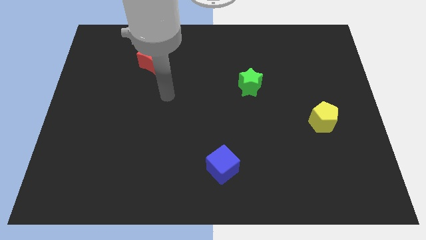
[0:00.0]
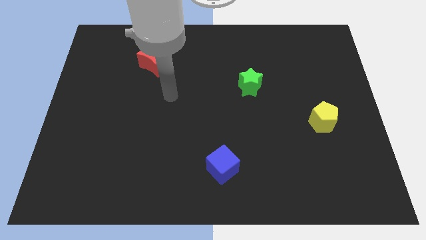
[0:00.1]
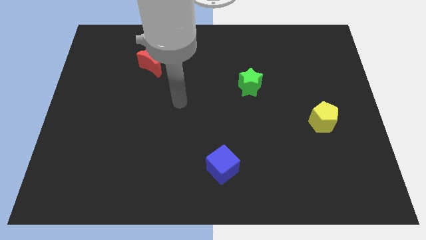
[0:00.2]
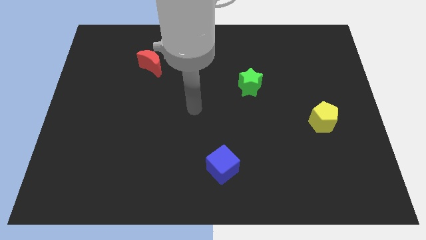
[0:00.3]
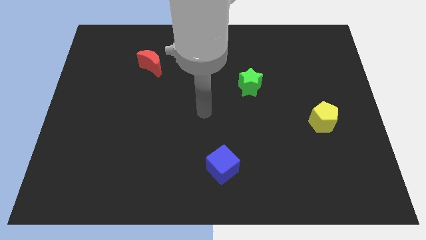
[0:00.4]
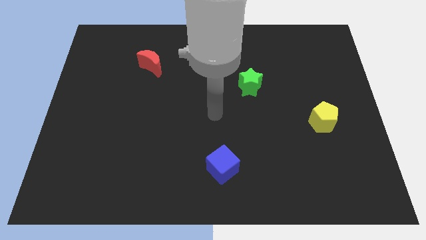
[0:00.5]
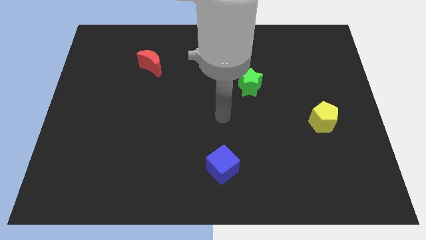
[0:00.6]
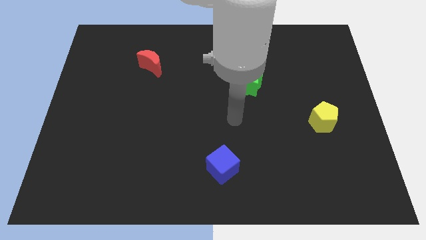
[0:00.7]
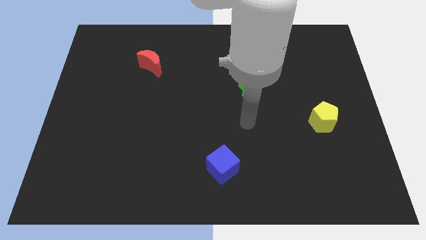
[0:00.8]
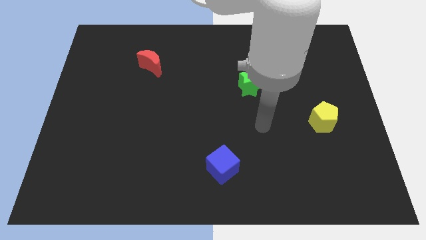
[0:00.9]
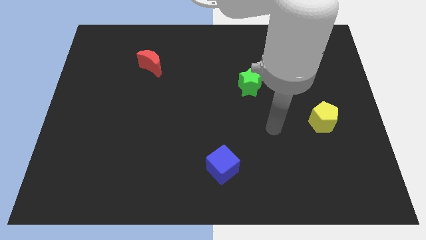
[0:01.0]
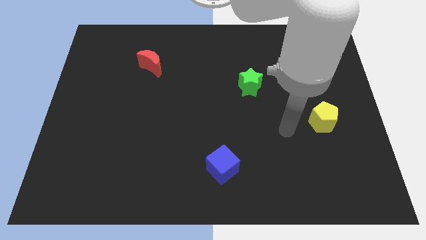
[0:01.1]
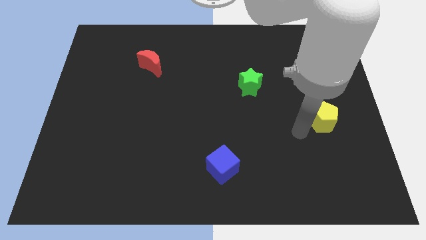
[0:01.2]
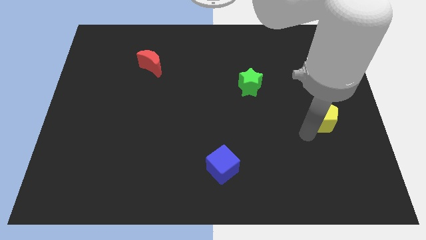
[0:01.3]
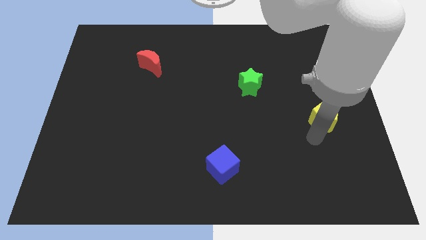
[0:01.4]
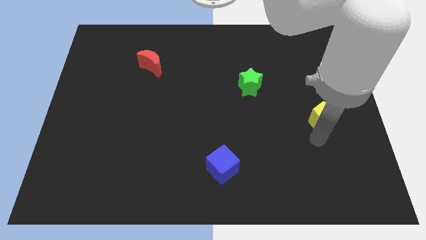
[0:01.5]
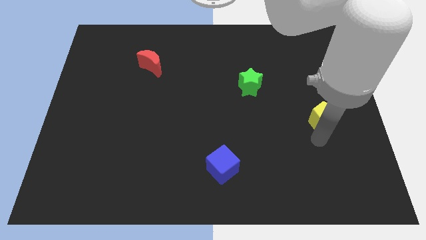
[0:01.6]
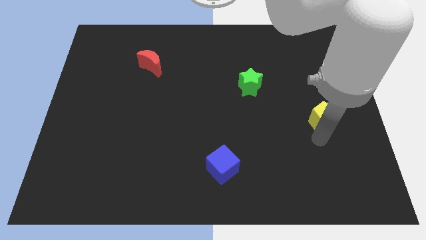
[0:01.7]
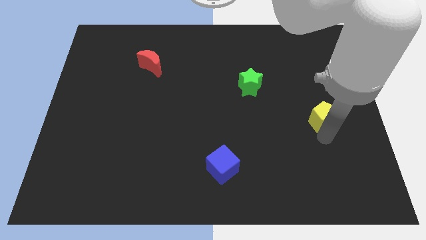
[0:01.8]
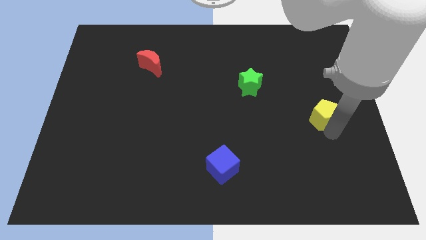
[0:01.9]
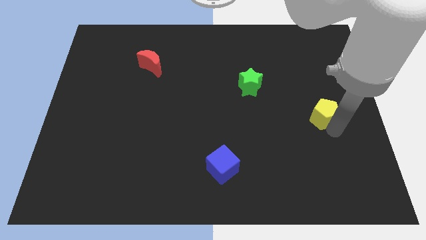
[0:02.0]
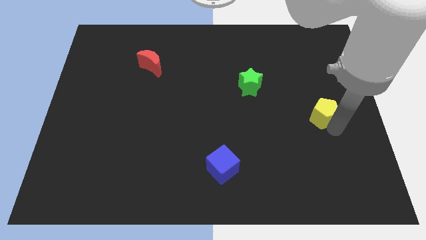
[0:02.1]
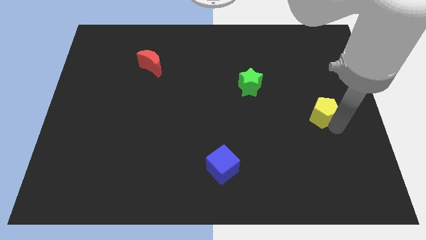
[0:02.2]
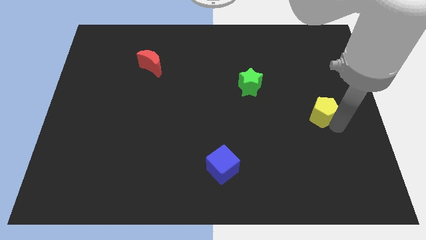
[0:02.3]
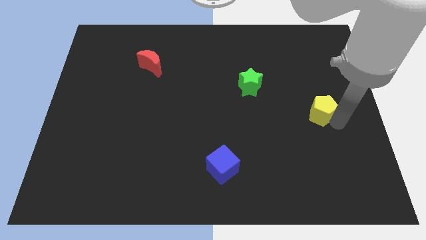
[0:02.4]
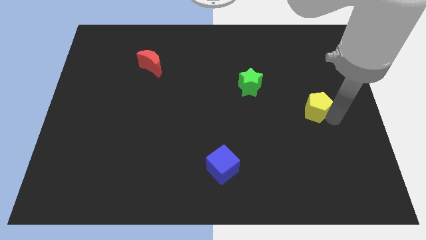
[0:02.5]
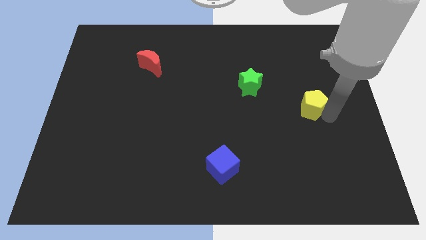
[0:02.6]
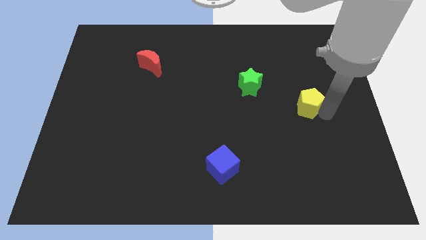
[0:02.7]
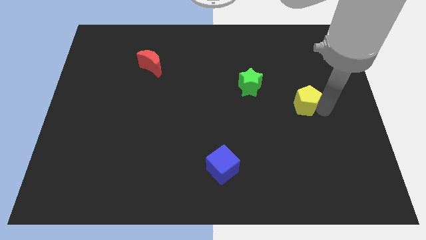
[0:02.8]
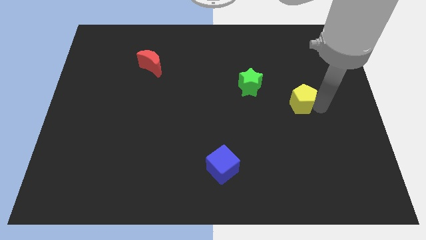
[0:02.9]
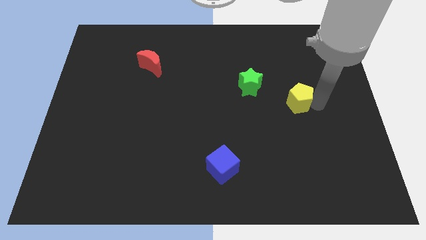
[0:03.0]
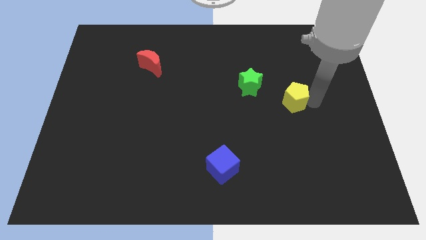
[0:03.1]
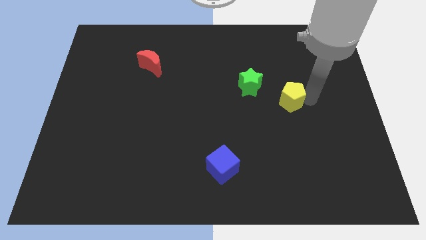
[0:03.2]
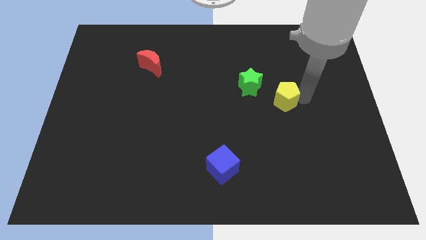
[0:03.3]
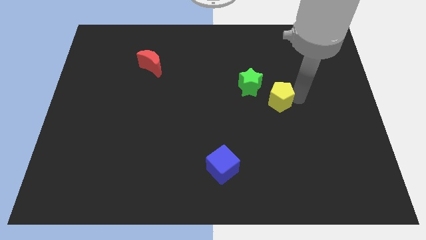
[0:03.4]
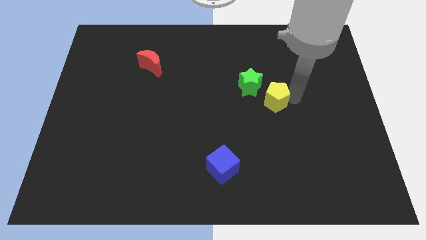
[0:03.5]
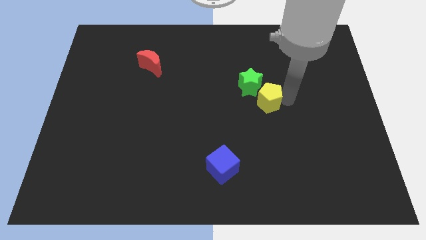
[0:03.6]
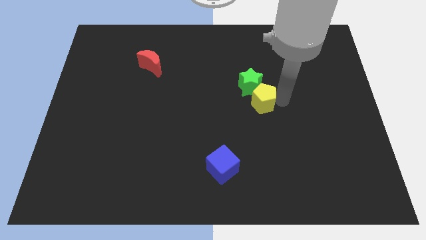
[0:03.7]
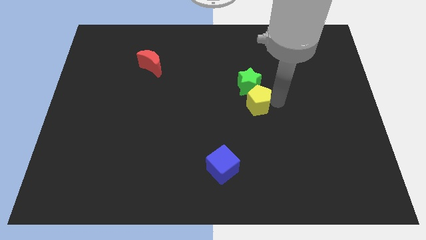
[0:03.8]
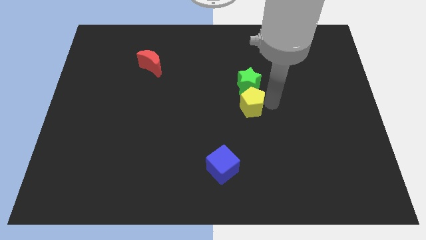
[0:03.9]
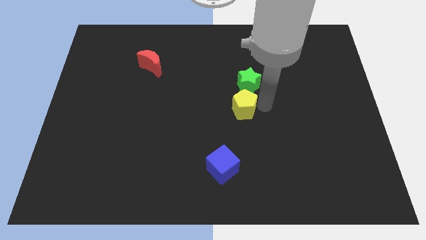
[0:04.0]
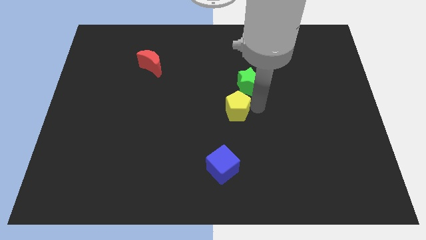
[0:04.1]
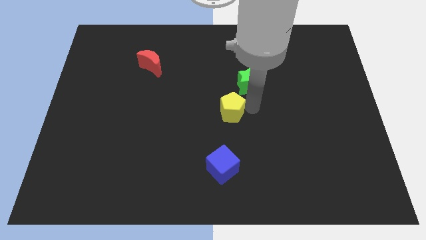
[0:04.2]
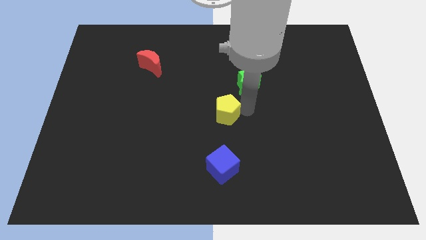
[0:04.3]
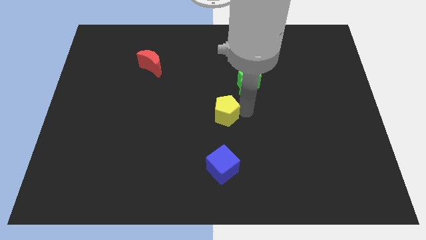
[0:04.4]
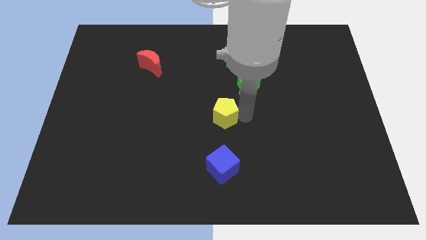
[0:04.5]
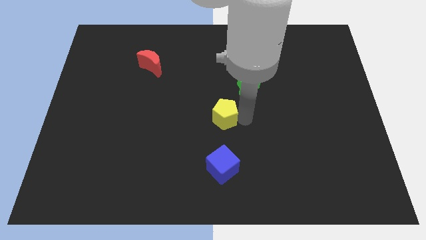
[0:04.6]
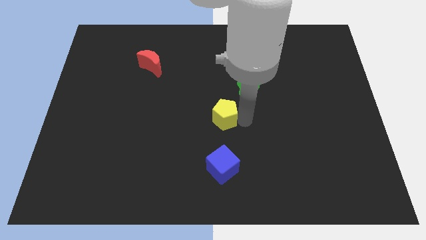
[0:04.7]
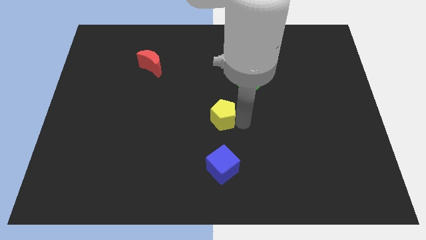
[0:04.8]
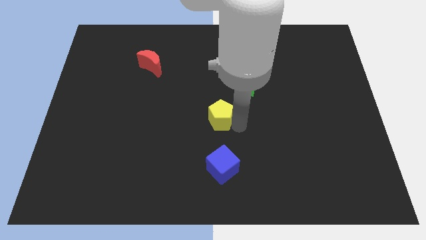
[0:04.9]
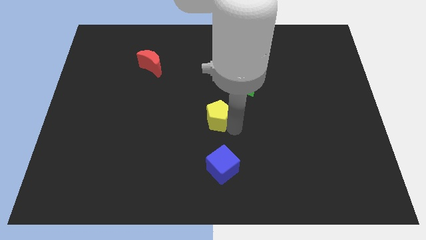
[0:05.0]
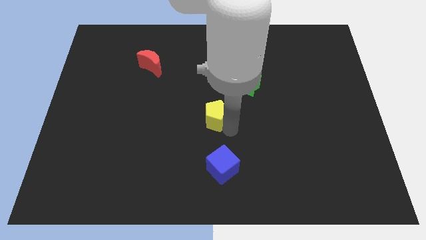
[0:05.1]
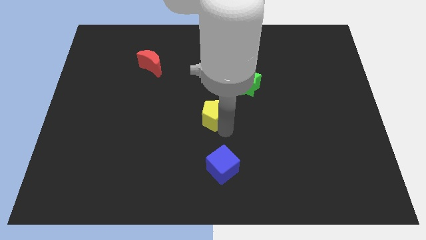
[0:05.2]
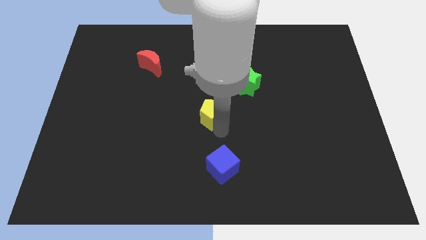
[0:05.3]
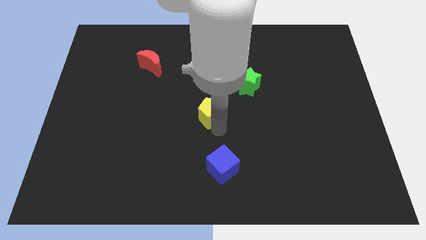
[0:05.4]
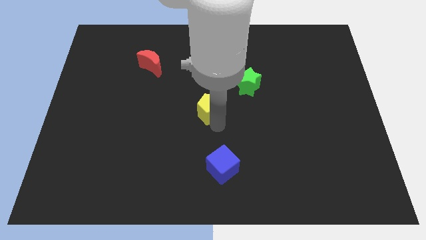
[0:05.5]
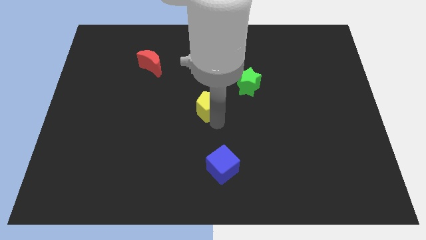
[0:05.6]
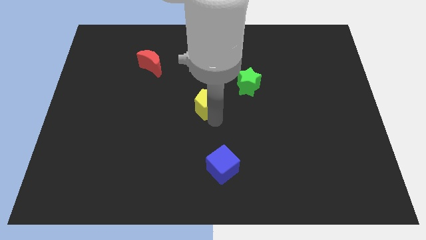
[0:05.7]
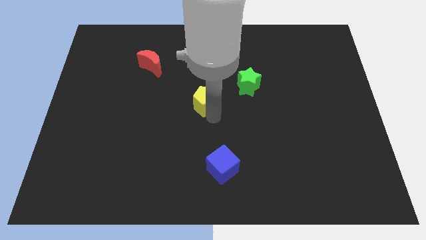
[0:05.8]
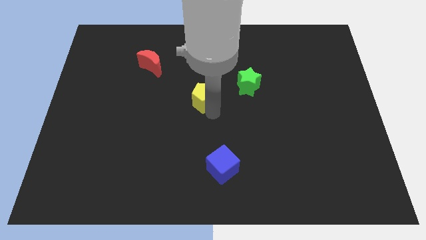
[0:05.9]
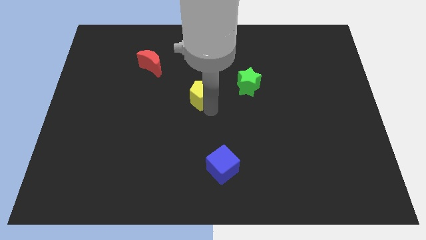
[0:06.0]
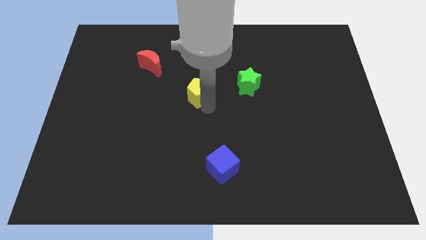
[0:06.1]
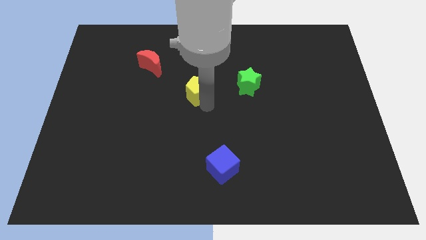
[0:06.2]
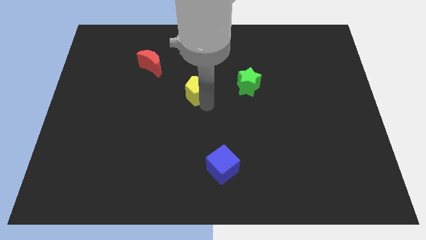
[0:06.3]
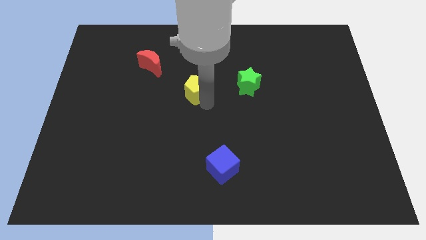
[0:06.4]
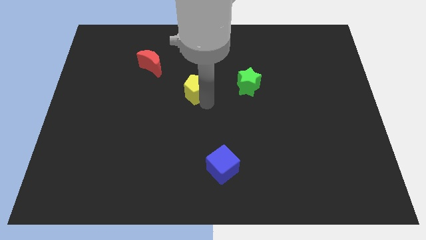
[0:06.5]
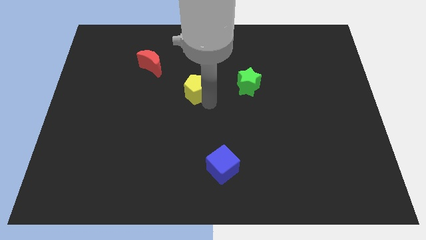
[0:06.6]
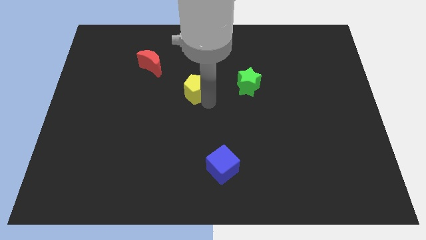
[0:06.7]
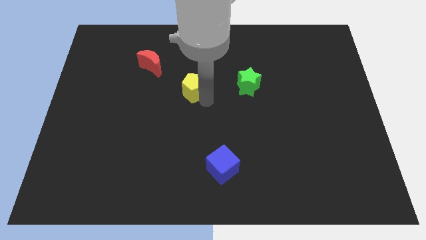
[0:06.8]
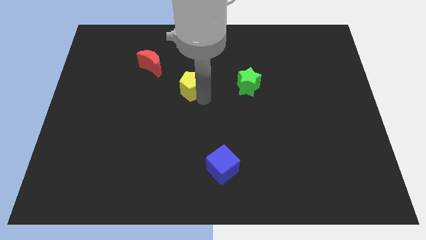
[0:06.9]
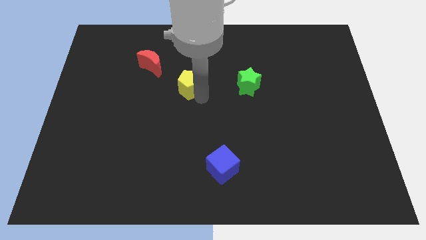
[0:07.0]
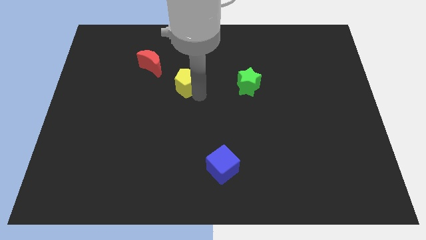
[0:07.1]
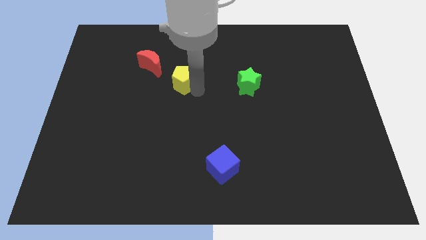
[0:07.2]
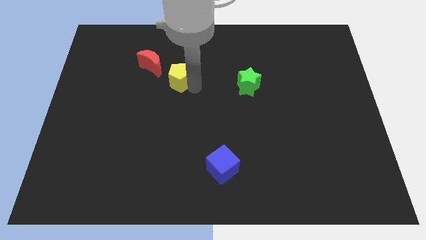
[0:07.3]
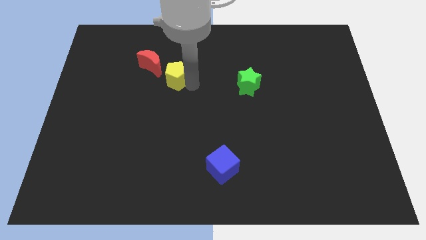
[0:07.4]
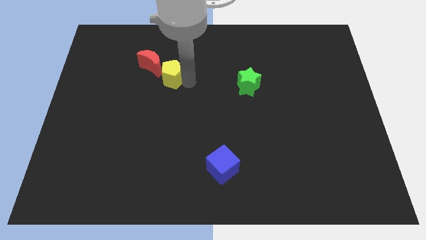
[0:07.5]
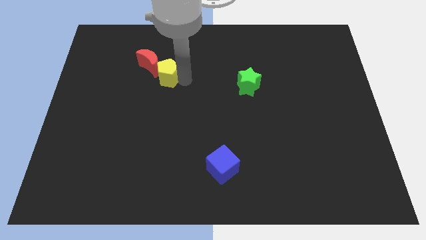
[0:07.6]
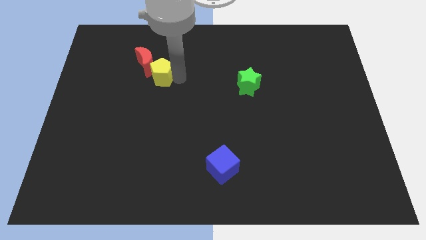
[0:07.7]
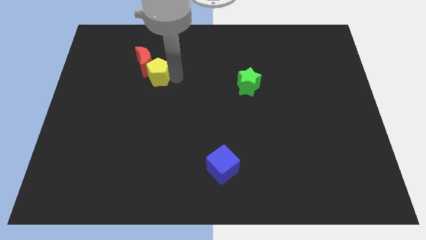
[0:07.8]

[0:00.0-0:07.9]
move the yellow pentagon to the red moon

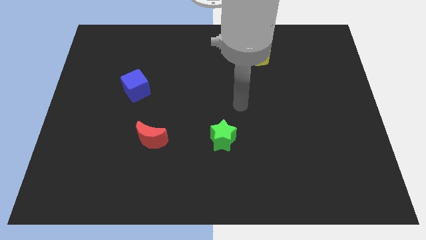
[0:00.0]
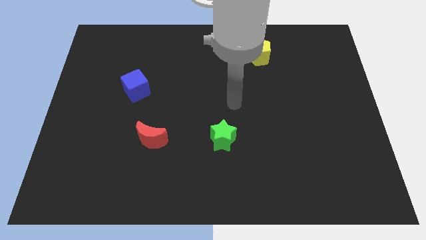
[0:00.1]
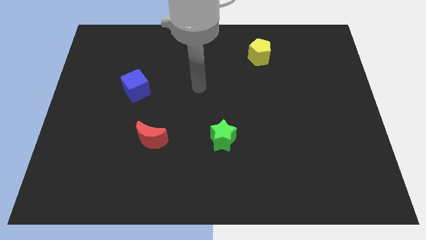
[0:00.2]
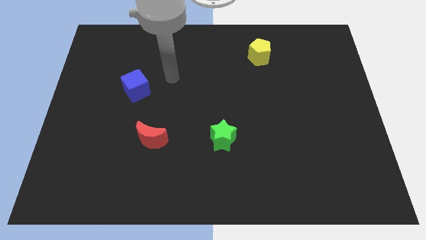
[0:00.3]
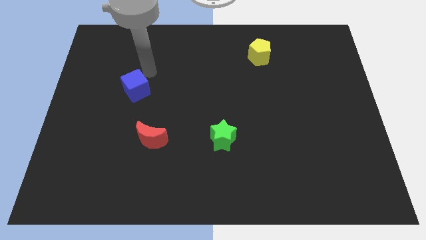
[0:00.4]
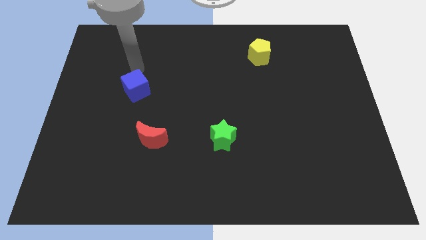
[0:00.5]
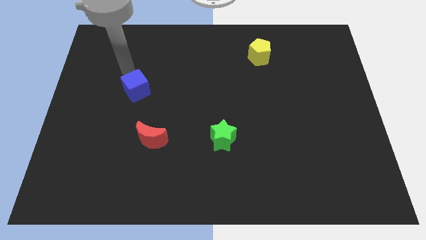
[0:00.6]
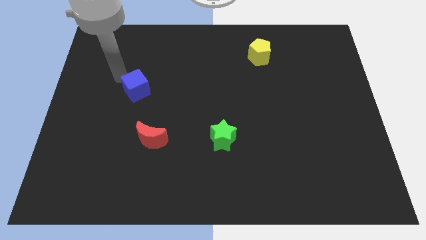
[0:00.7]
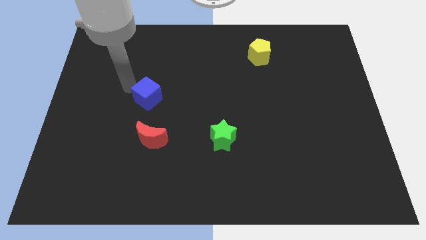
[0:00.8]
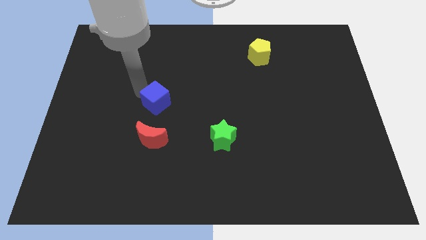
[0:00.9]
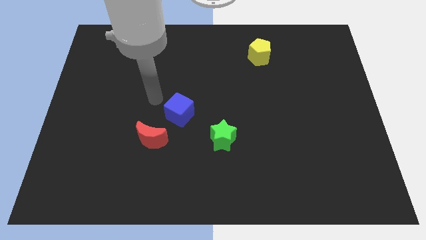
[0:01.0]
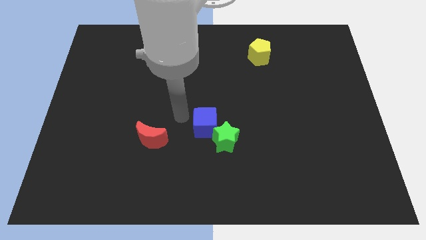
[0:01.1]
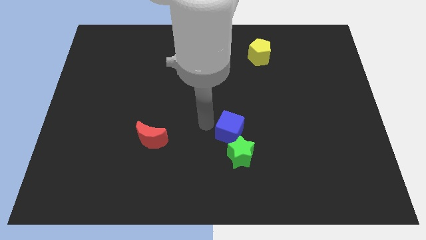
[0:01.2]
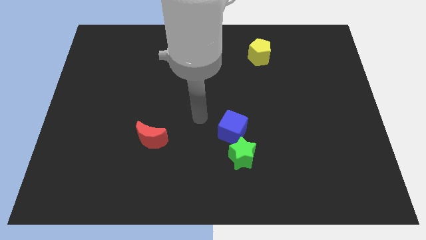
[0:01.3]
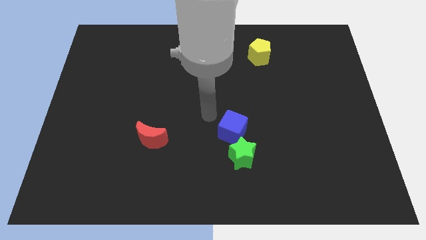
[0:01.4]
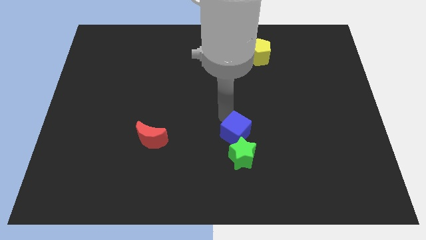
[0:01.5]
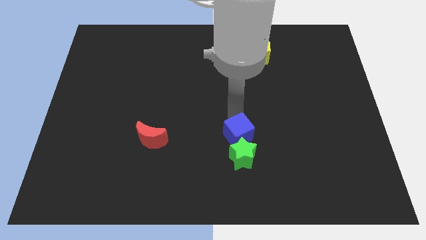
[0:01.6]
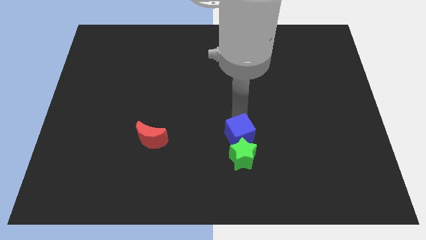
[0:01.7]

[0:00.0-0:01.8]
slide the cube to the star
